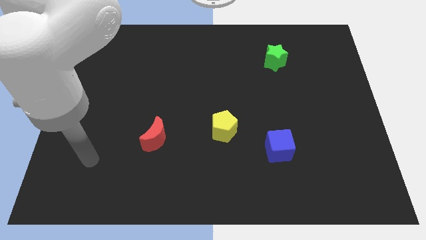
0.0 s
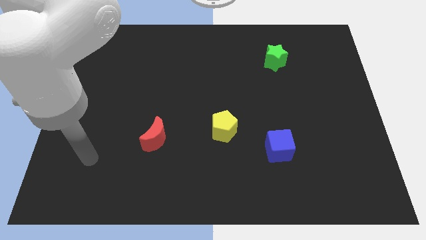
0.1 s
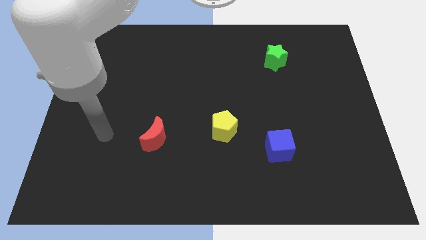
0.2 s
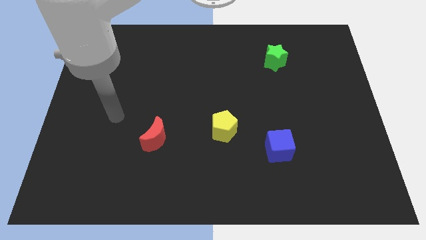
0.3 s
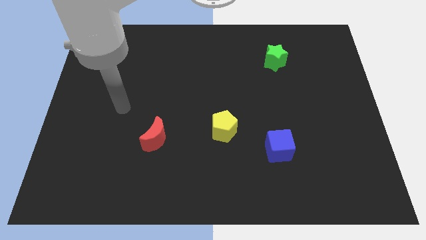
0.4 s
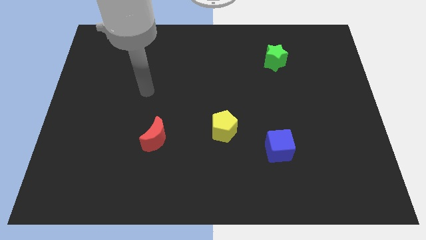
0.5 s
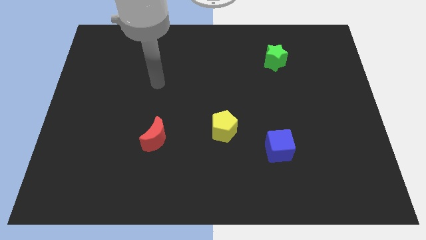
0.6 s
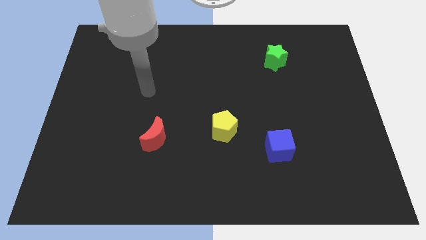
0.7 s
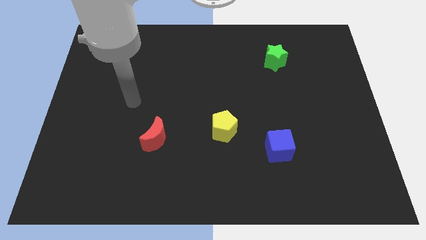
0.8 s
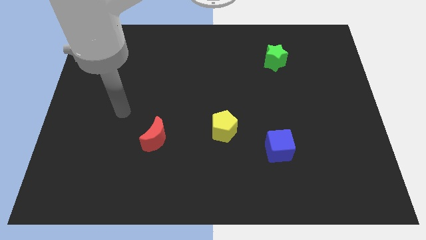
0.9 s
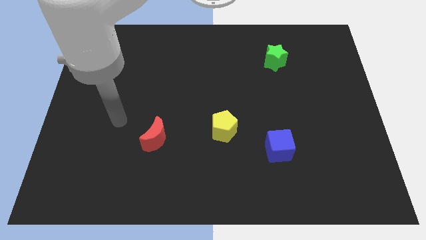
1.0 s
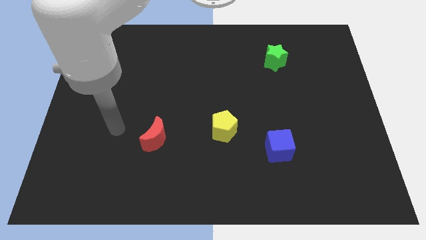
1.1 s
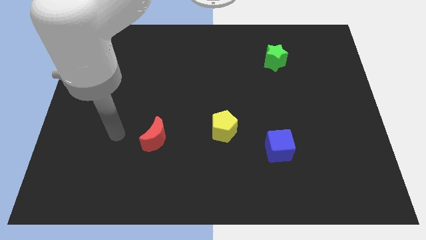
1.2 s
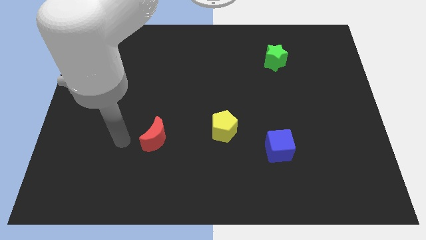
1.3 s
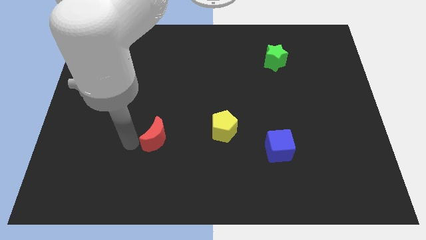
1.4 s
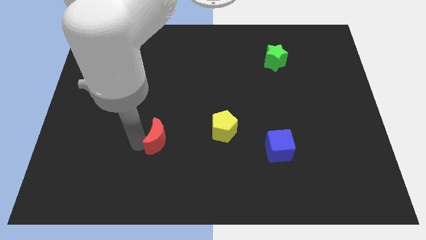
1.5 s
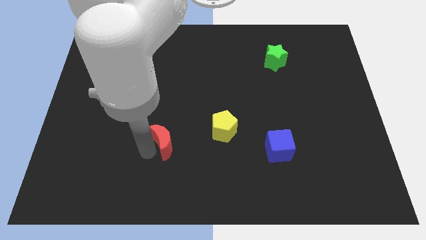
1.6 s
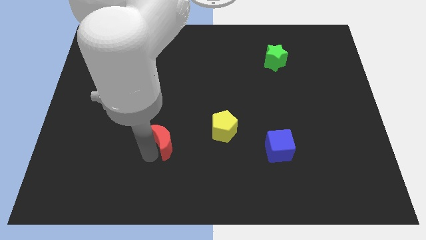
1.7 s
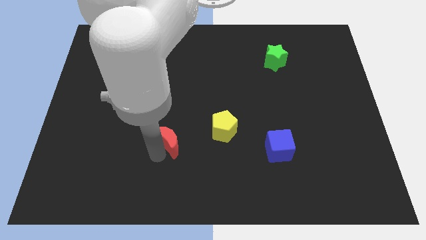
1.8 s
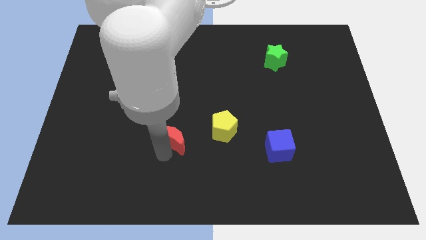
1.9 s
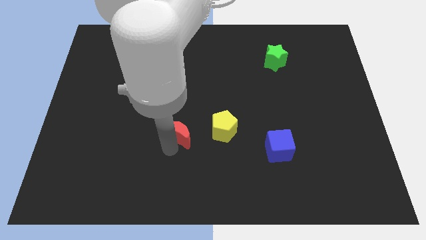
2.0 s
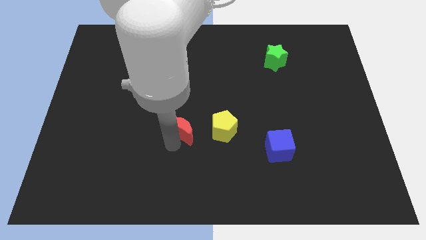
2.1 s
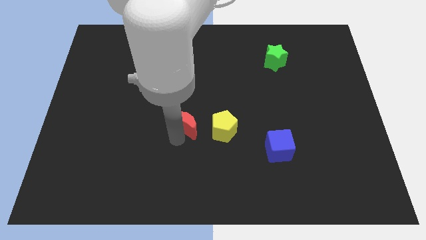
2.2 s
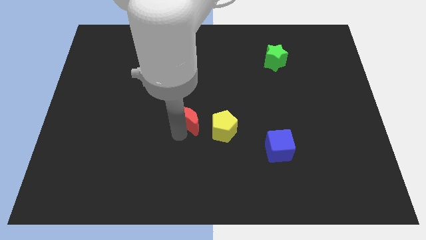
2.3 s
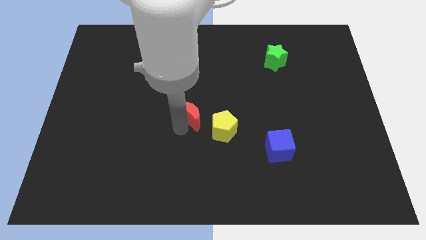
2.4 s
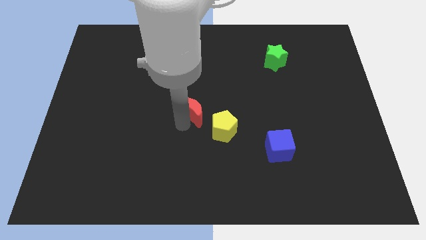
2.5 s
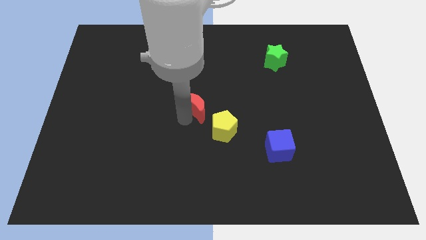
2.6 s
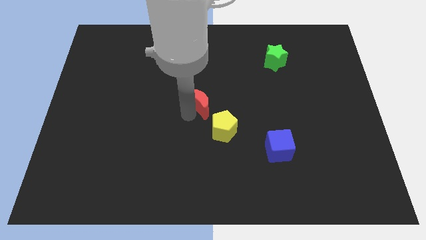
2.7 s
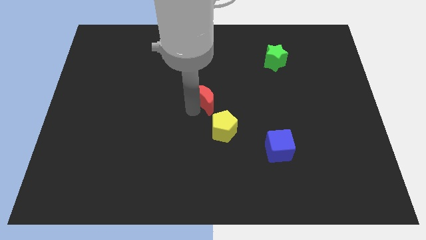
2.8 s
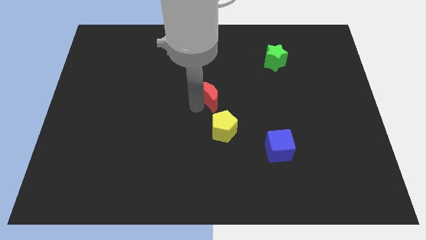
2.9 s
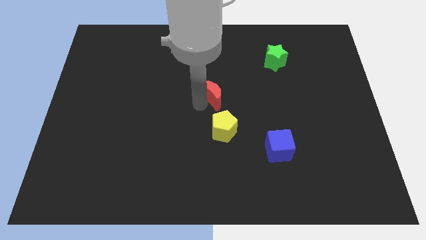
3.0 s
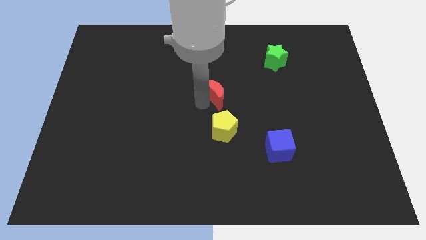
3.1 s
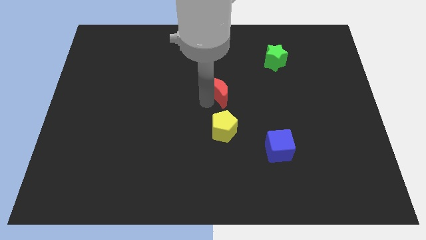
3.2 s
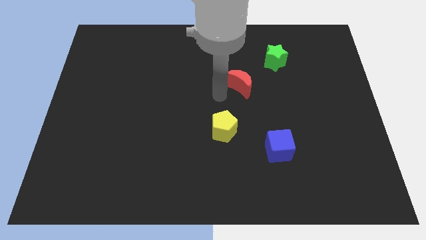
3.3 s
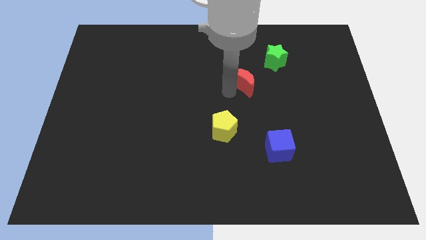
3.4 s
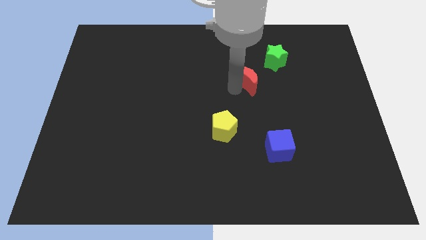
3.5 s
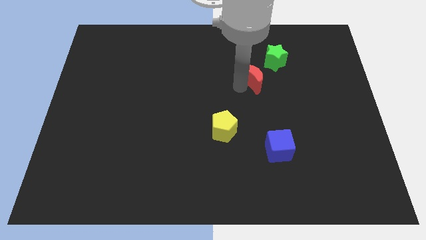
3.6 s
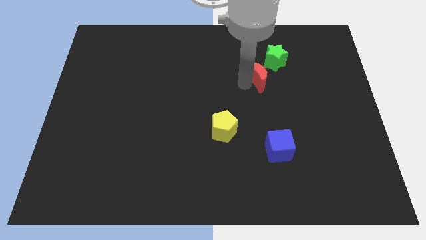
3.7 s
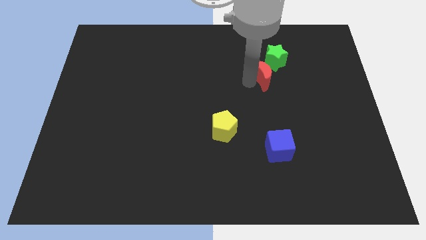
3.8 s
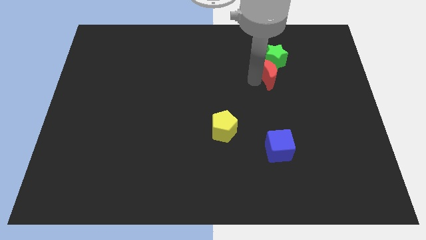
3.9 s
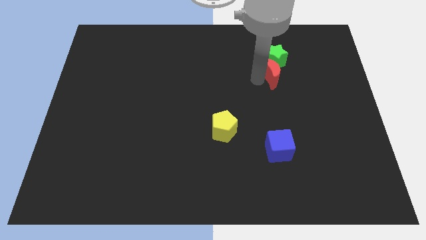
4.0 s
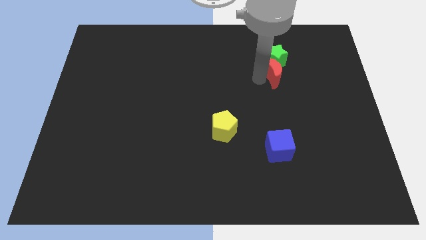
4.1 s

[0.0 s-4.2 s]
put the red block to the green star

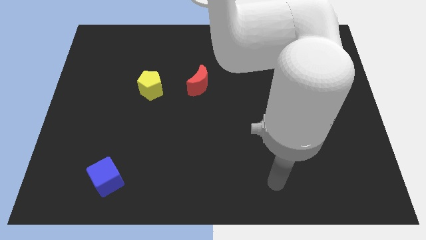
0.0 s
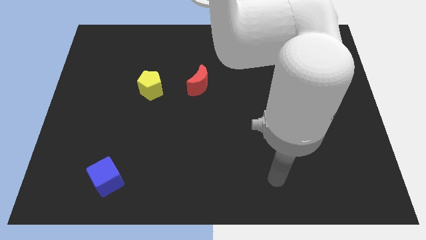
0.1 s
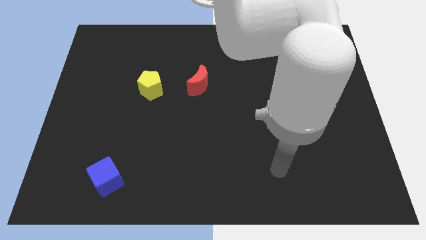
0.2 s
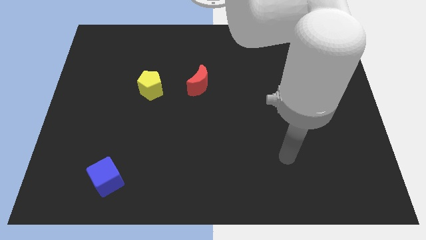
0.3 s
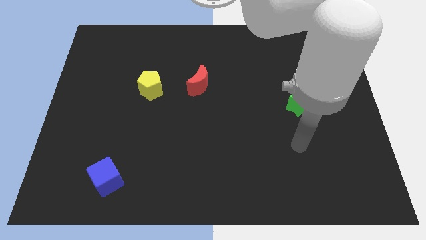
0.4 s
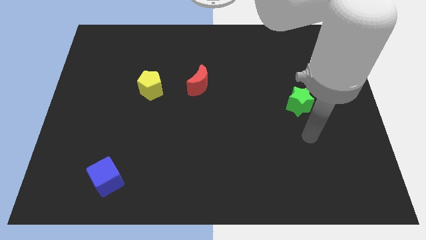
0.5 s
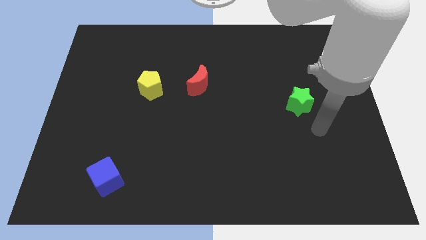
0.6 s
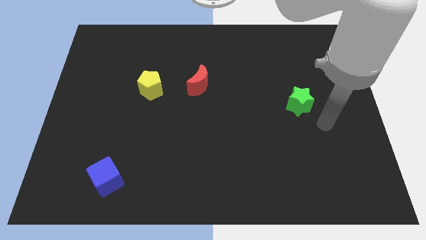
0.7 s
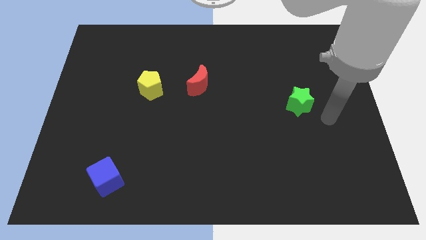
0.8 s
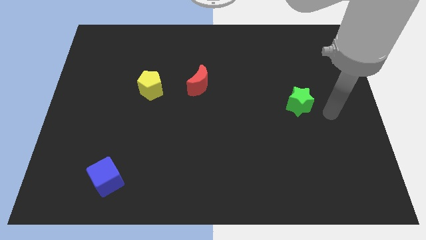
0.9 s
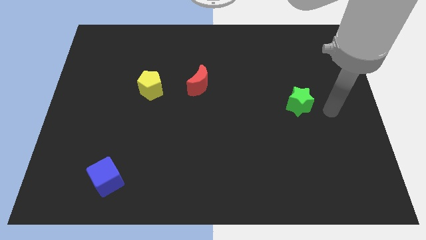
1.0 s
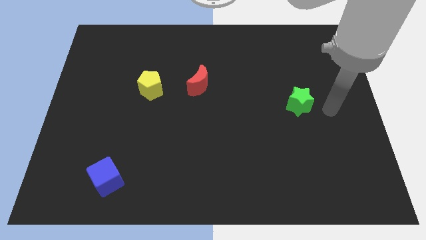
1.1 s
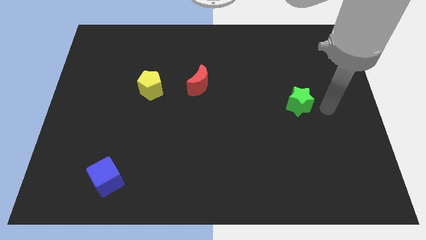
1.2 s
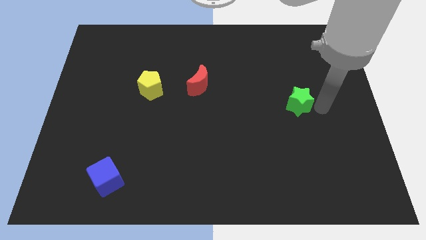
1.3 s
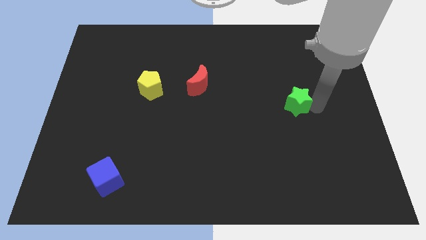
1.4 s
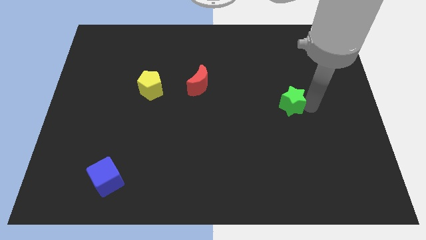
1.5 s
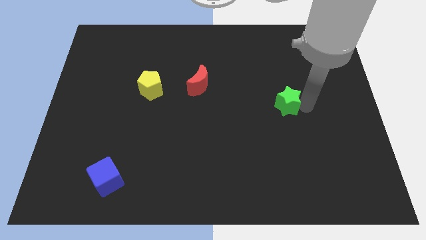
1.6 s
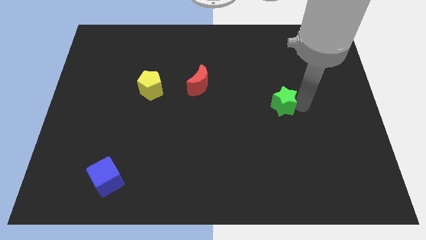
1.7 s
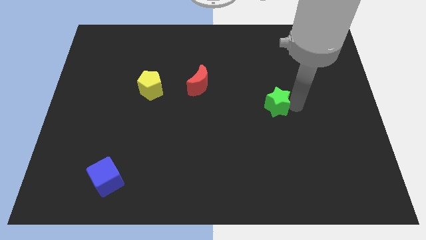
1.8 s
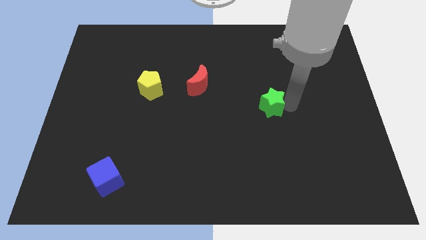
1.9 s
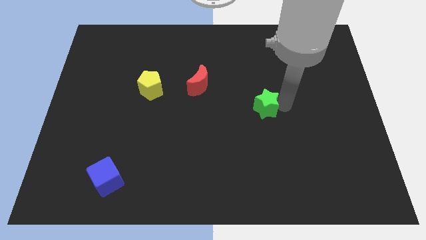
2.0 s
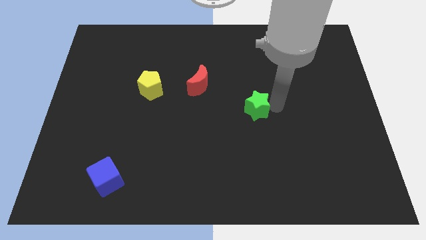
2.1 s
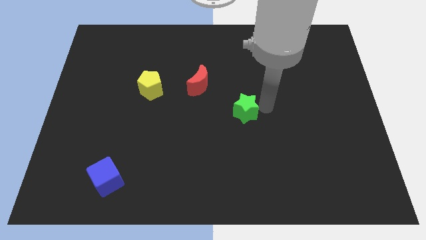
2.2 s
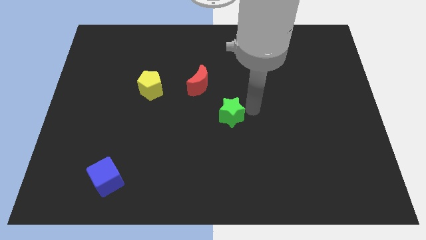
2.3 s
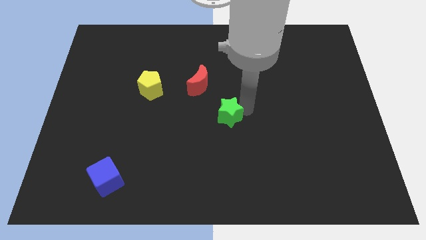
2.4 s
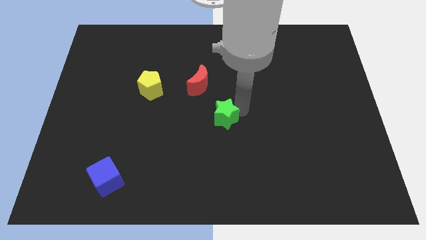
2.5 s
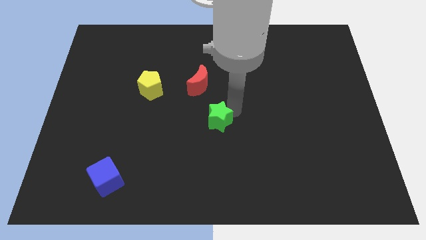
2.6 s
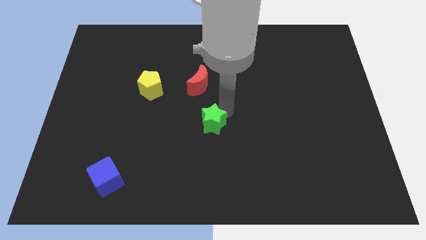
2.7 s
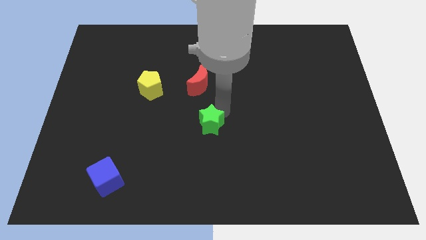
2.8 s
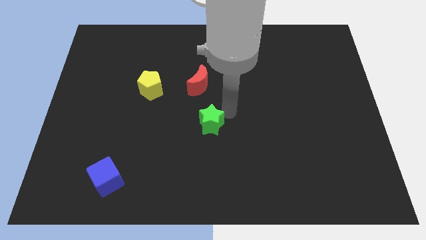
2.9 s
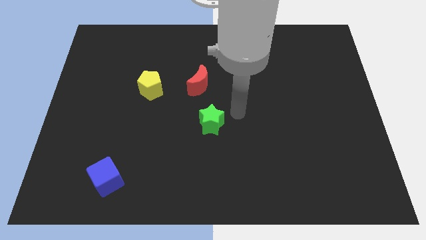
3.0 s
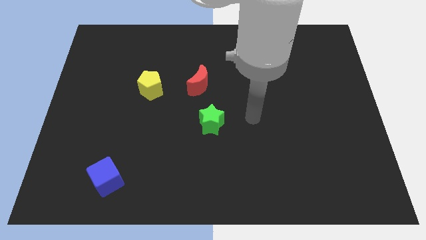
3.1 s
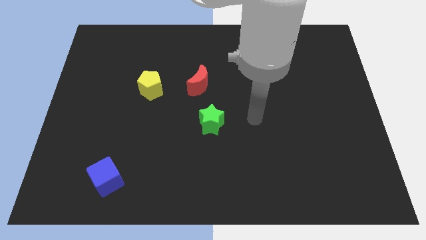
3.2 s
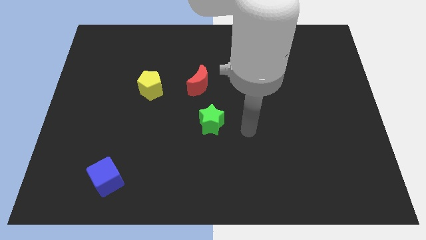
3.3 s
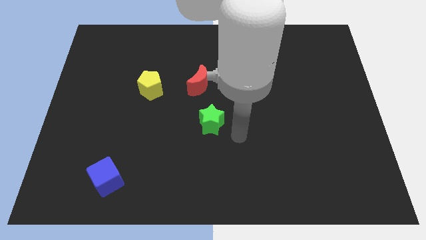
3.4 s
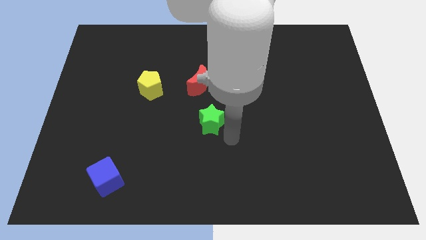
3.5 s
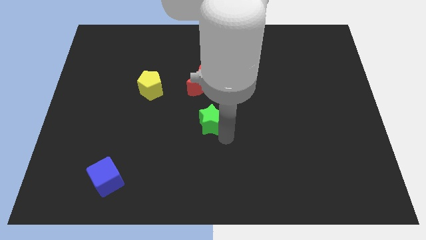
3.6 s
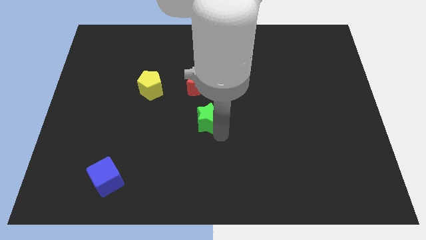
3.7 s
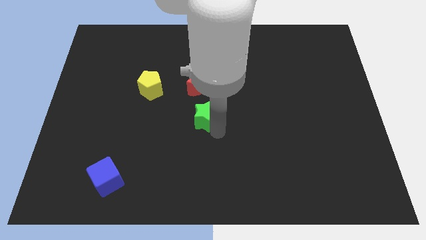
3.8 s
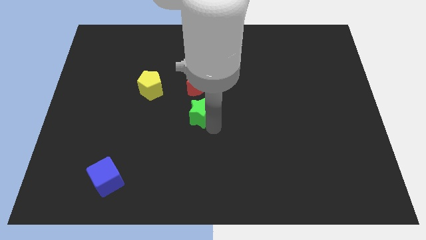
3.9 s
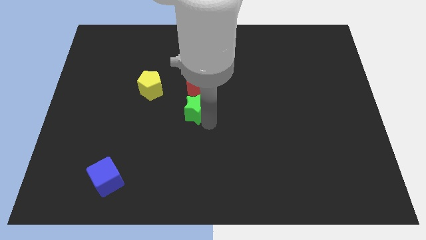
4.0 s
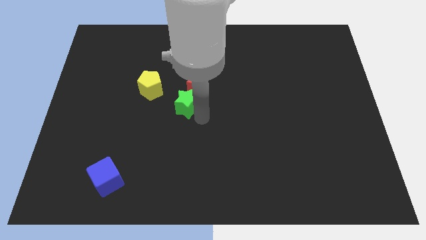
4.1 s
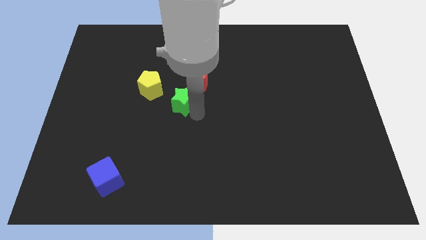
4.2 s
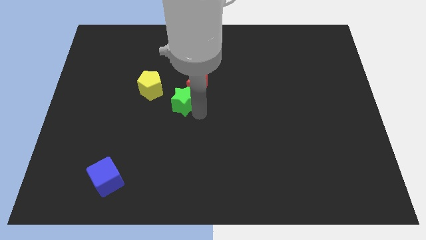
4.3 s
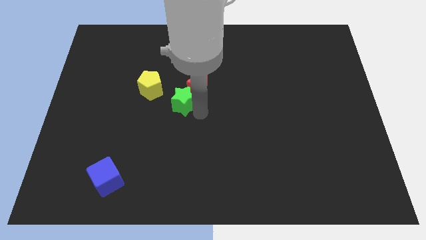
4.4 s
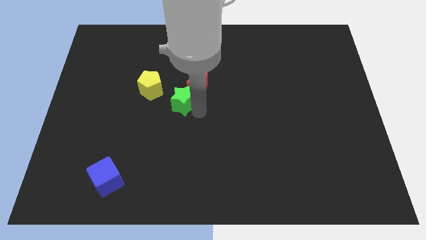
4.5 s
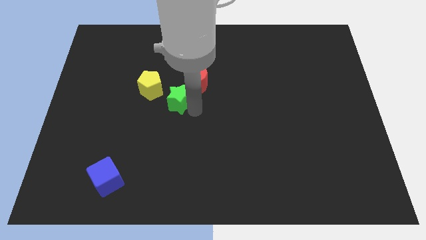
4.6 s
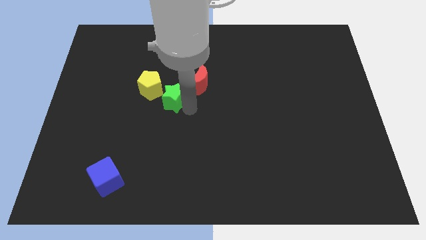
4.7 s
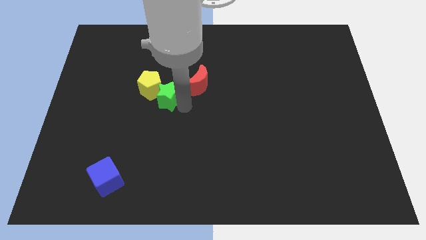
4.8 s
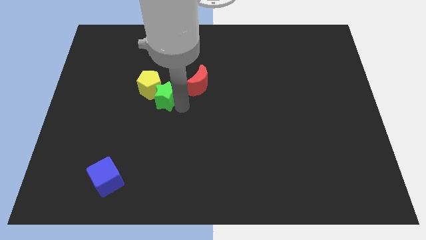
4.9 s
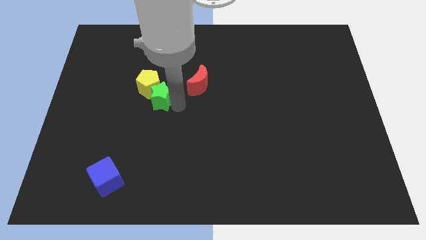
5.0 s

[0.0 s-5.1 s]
push the green star next to the yellow block
